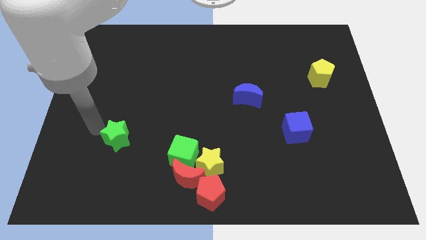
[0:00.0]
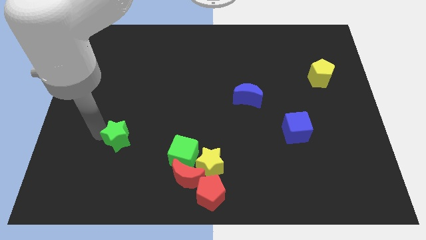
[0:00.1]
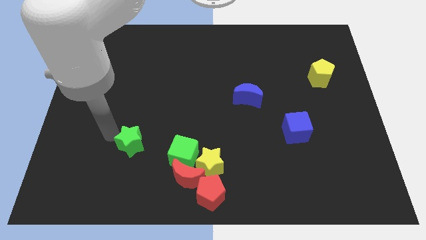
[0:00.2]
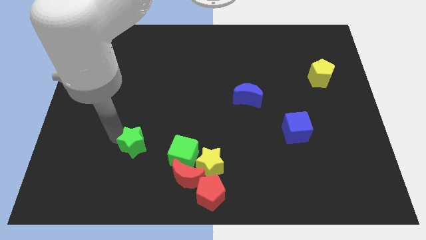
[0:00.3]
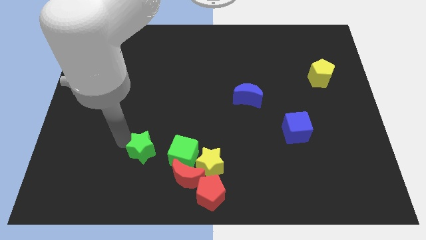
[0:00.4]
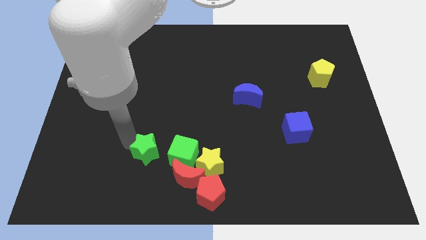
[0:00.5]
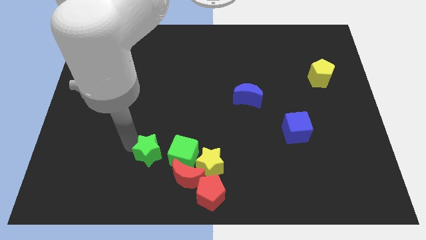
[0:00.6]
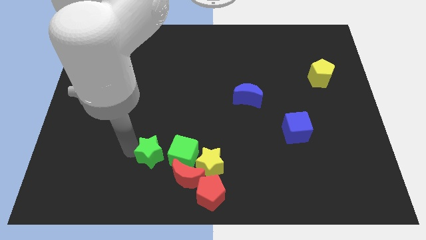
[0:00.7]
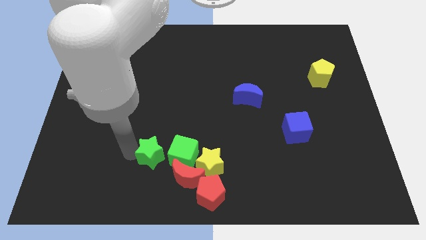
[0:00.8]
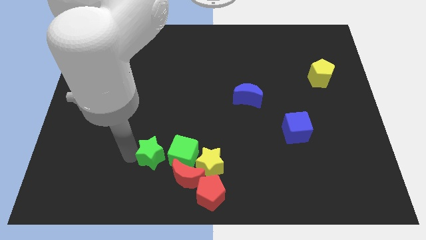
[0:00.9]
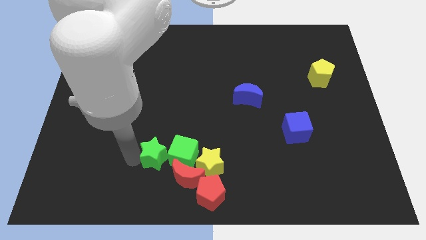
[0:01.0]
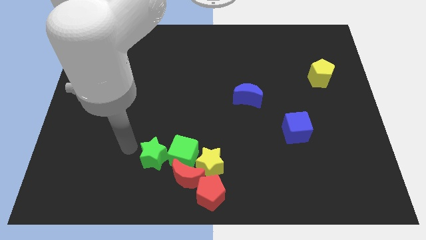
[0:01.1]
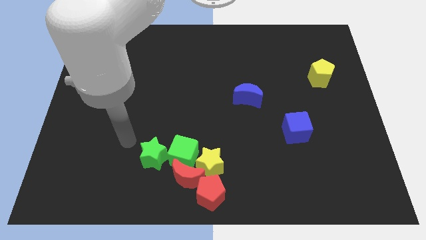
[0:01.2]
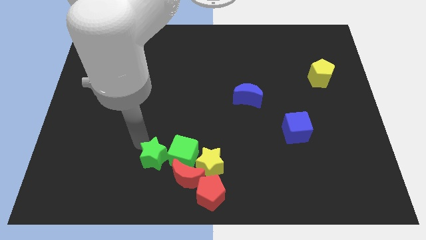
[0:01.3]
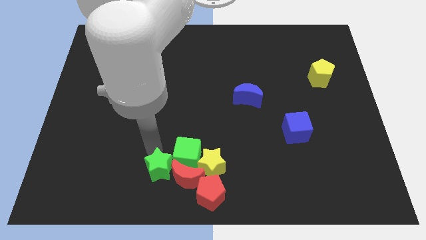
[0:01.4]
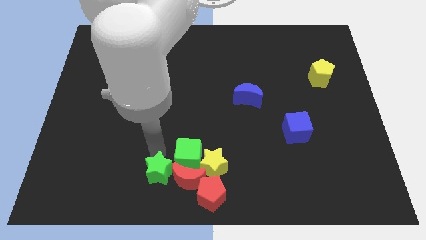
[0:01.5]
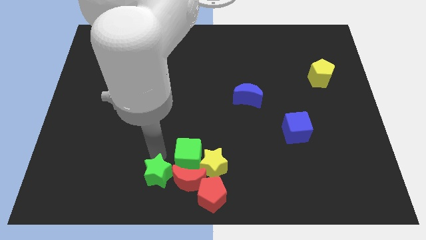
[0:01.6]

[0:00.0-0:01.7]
place the green star to the left of the red crescent

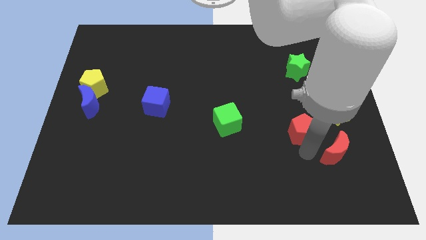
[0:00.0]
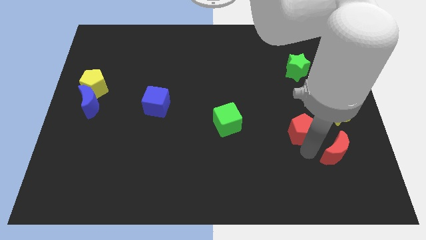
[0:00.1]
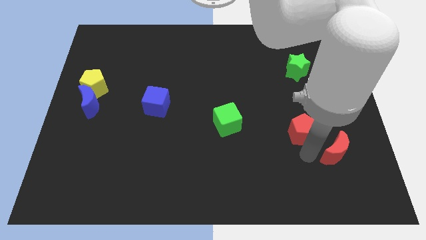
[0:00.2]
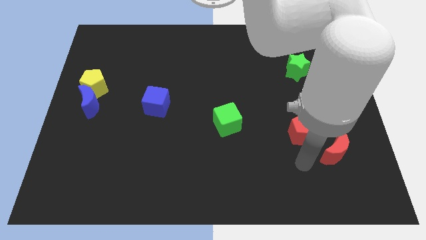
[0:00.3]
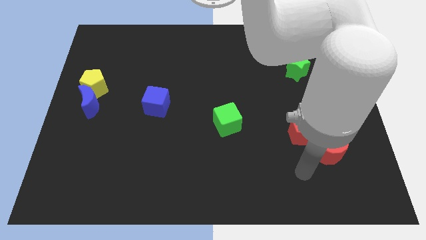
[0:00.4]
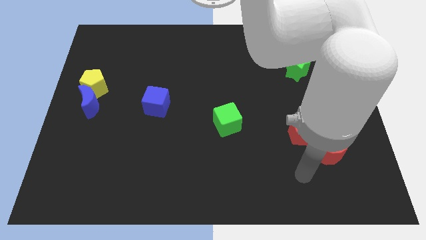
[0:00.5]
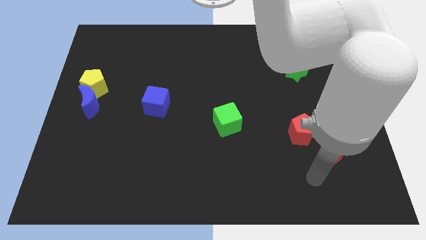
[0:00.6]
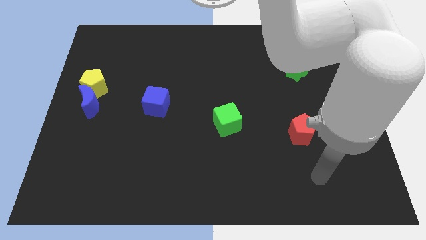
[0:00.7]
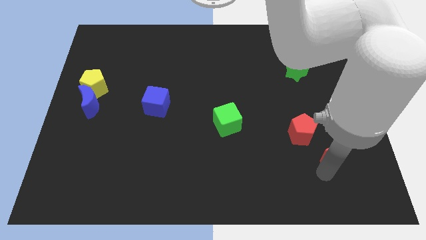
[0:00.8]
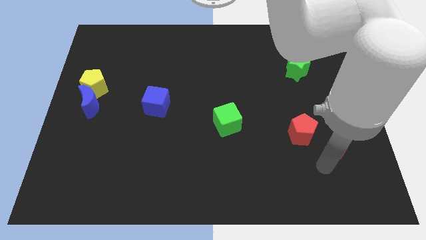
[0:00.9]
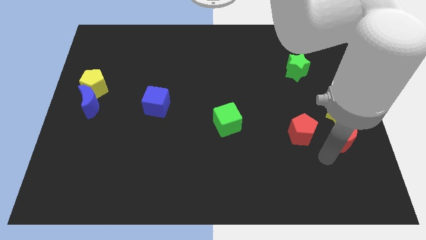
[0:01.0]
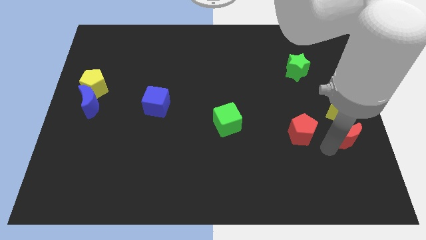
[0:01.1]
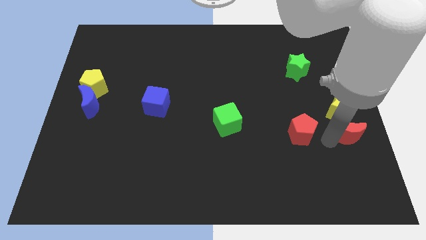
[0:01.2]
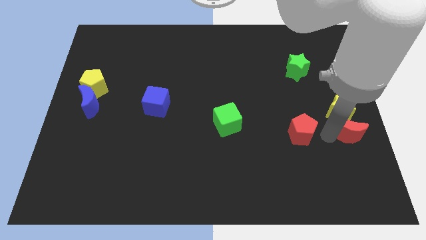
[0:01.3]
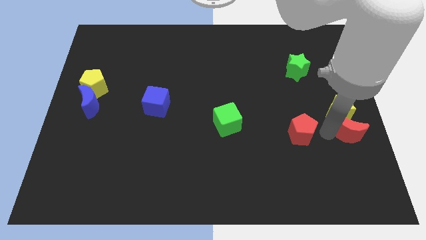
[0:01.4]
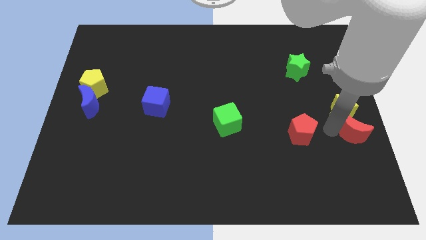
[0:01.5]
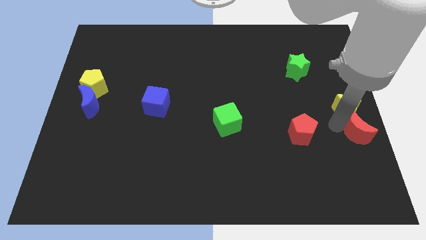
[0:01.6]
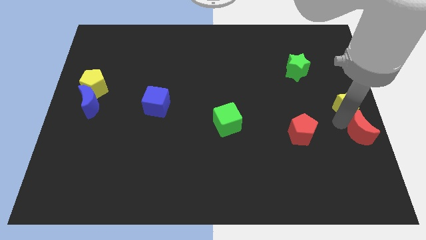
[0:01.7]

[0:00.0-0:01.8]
put the red moon below the yellow star

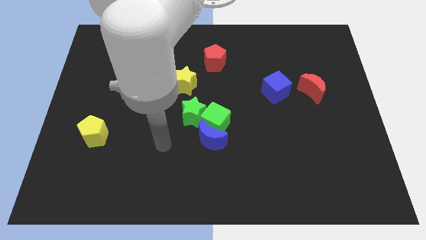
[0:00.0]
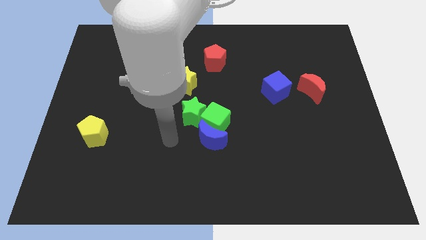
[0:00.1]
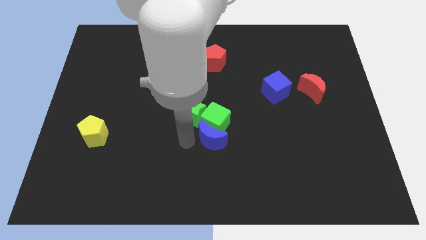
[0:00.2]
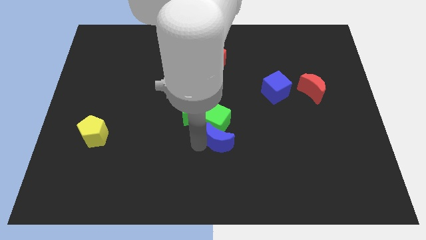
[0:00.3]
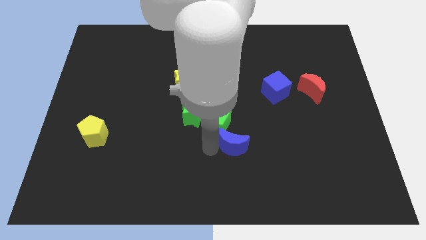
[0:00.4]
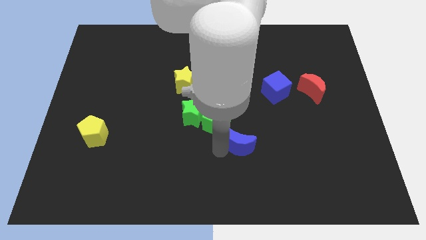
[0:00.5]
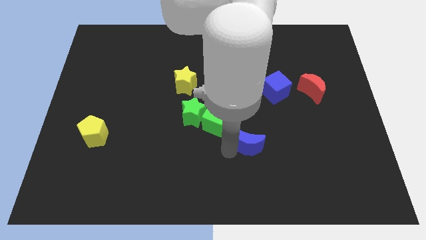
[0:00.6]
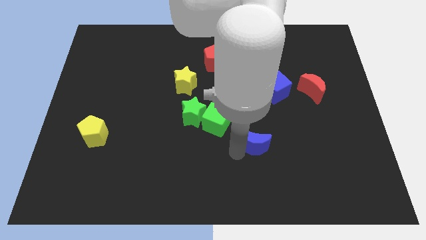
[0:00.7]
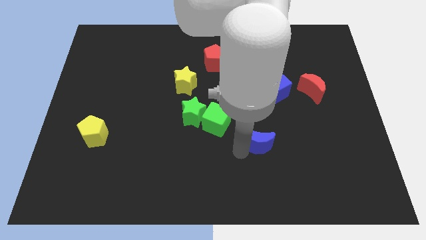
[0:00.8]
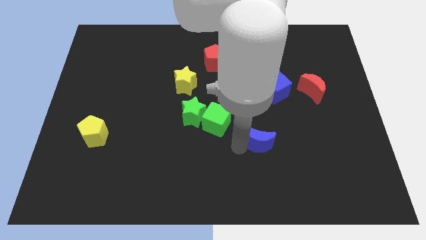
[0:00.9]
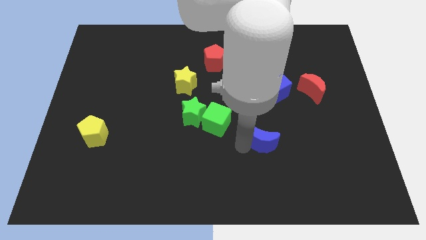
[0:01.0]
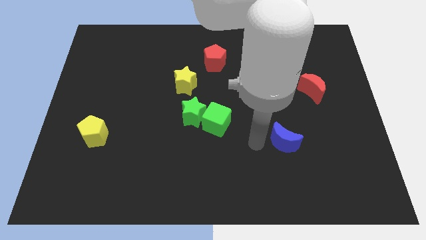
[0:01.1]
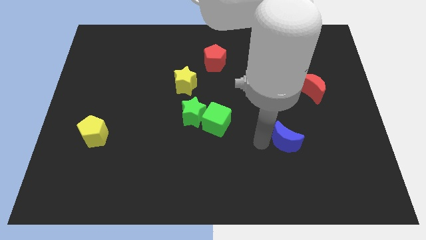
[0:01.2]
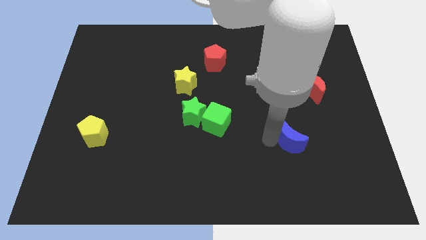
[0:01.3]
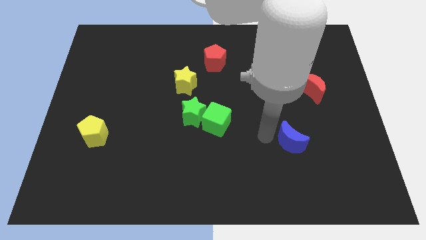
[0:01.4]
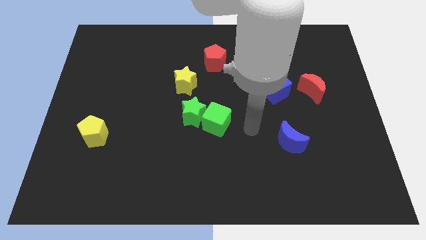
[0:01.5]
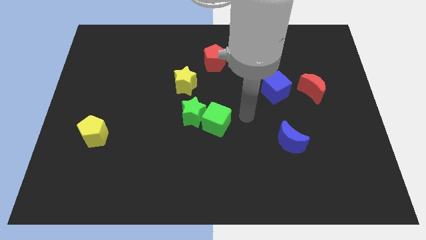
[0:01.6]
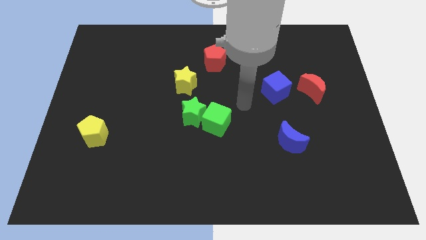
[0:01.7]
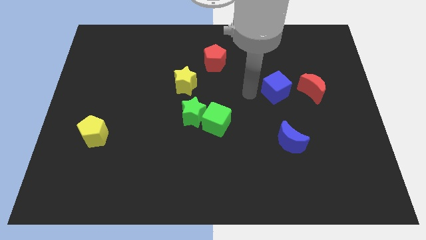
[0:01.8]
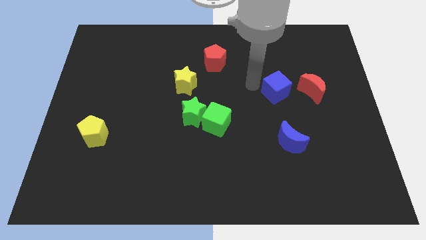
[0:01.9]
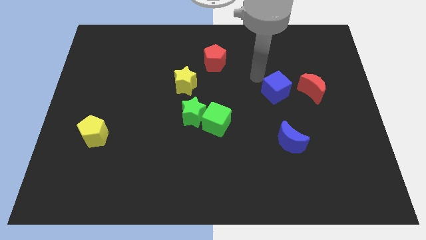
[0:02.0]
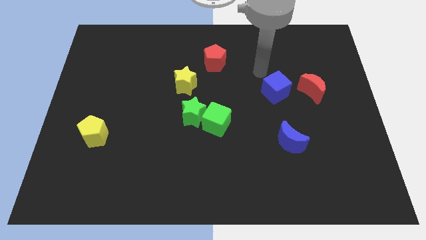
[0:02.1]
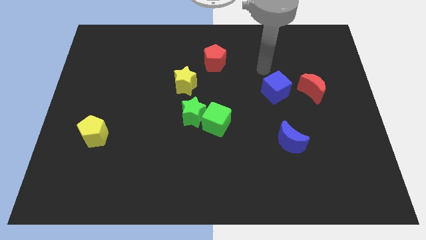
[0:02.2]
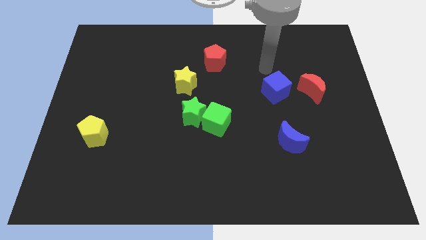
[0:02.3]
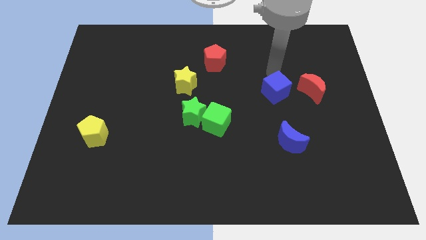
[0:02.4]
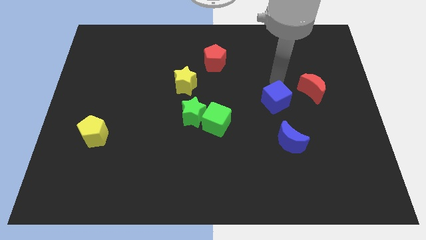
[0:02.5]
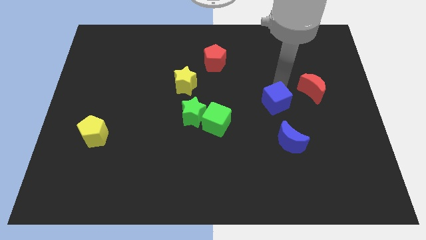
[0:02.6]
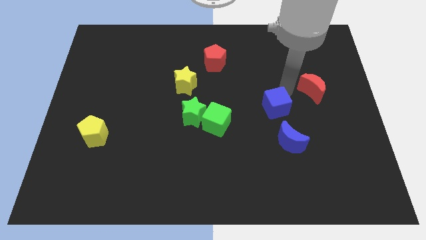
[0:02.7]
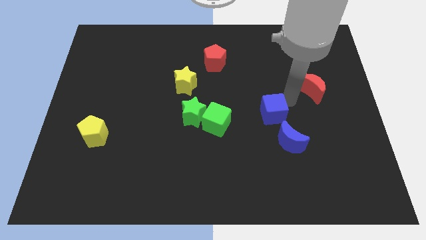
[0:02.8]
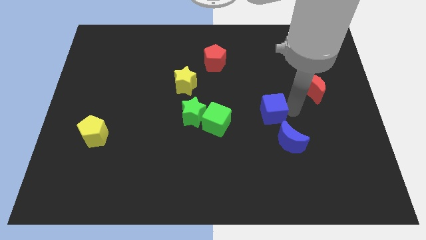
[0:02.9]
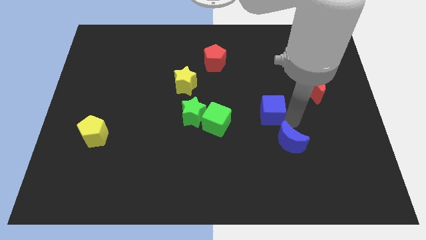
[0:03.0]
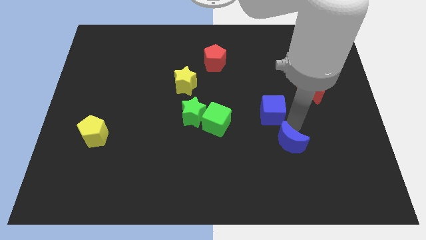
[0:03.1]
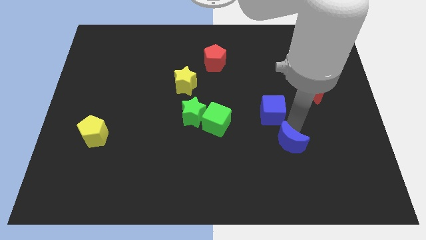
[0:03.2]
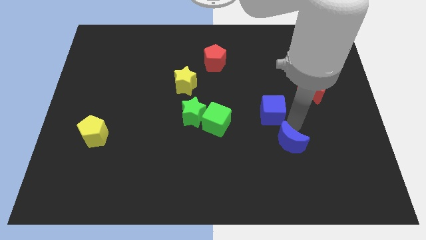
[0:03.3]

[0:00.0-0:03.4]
move the blue cube to the top left of the blue crescent

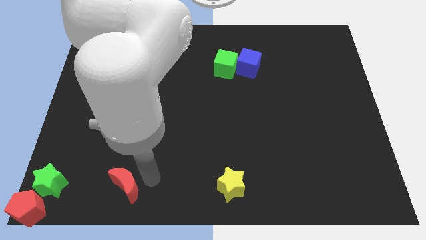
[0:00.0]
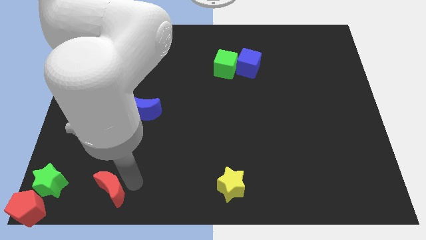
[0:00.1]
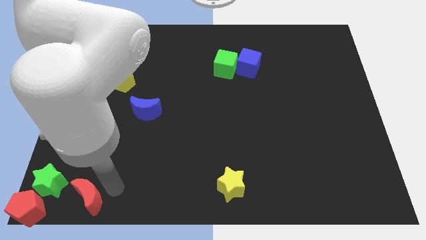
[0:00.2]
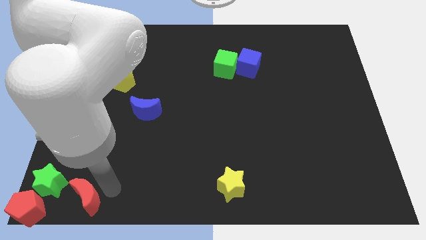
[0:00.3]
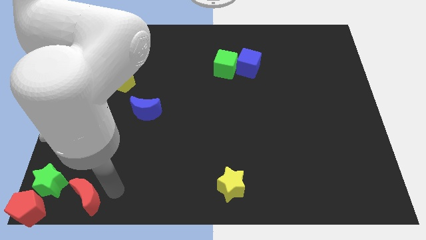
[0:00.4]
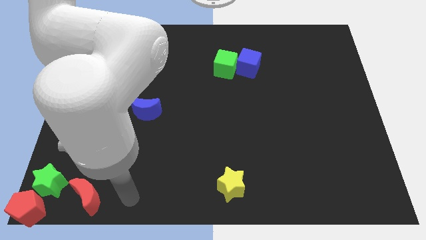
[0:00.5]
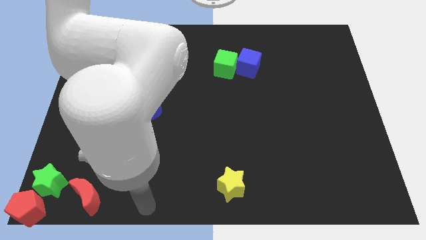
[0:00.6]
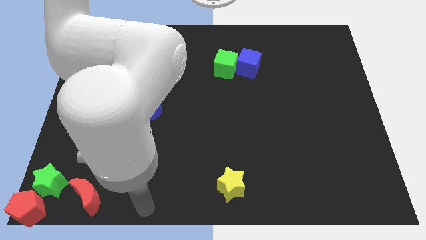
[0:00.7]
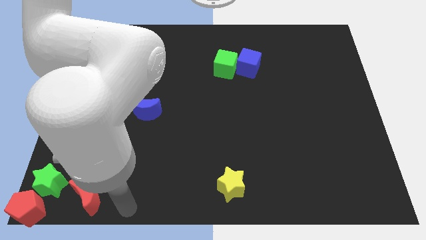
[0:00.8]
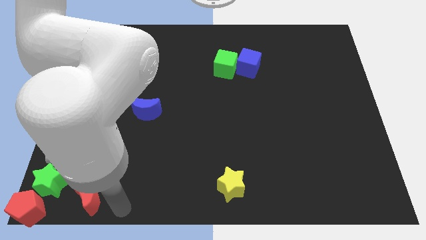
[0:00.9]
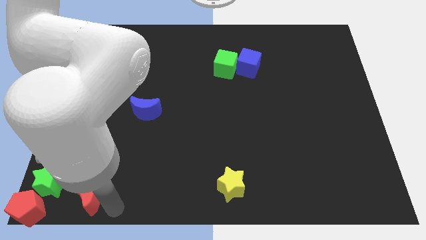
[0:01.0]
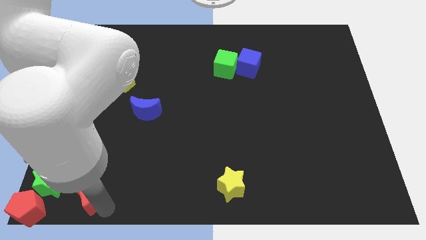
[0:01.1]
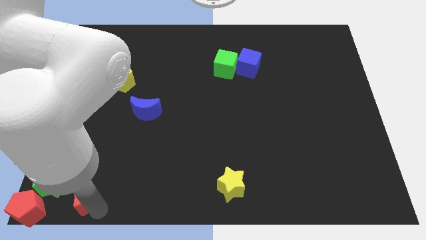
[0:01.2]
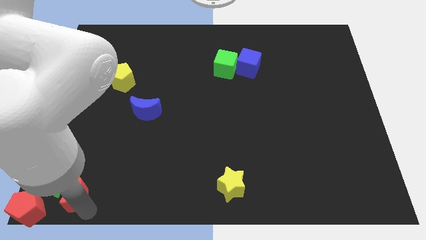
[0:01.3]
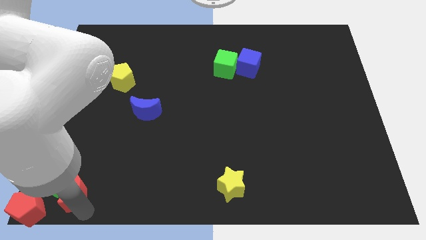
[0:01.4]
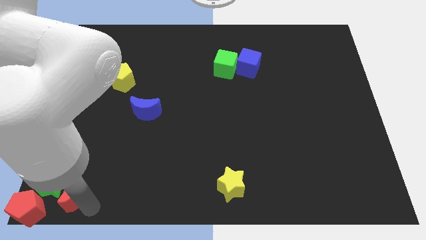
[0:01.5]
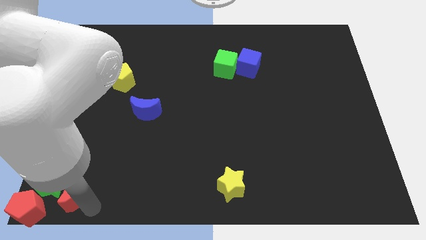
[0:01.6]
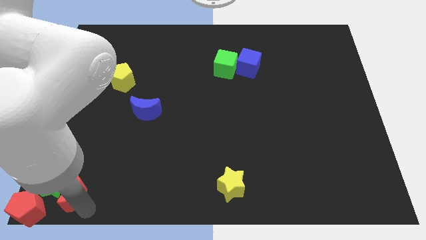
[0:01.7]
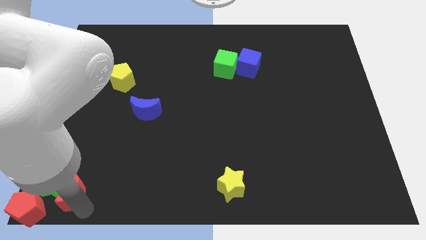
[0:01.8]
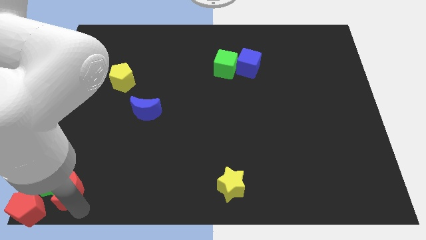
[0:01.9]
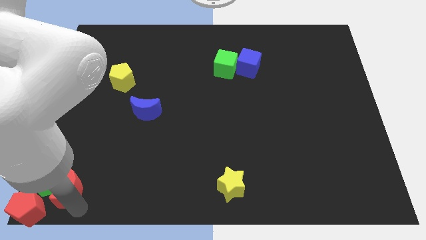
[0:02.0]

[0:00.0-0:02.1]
push the red crescent into the right side of the green star
